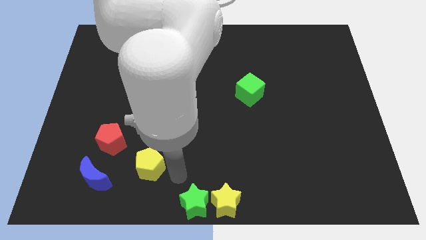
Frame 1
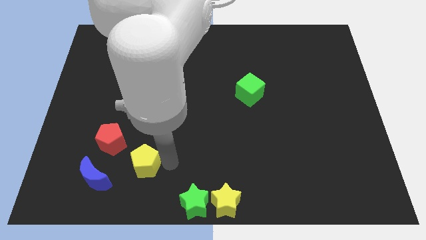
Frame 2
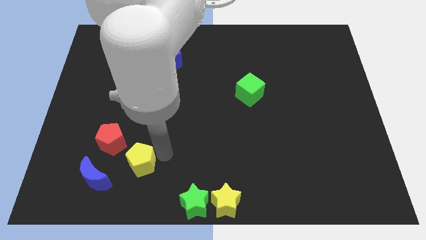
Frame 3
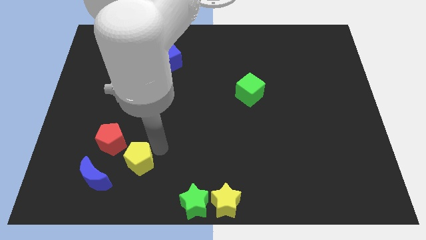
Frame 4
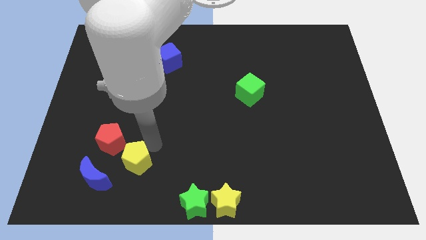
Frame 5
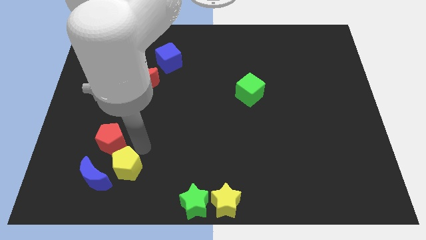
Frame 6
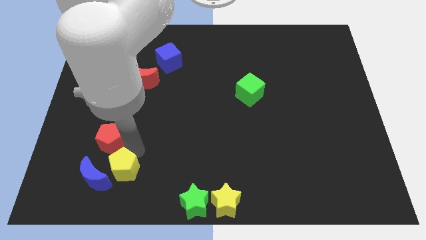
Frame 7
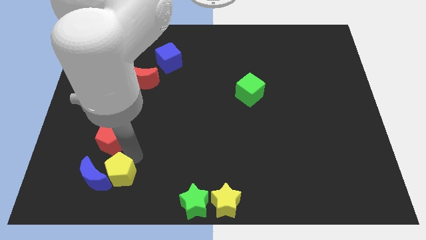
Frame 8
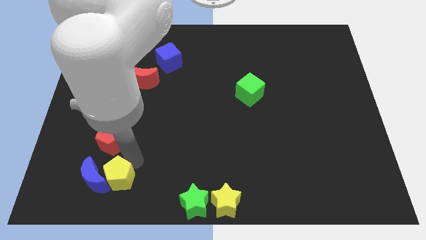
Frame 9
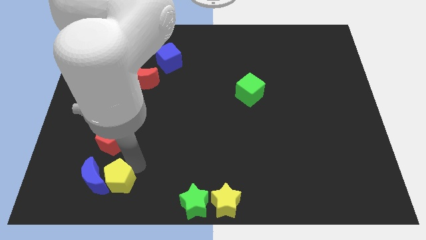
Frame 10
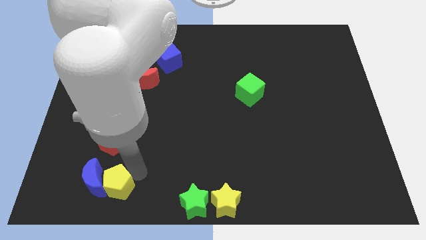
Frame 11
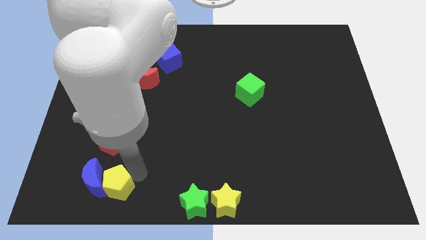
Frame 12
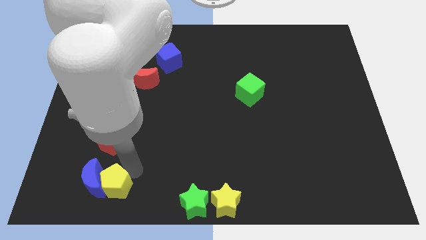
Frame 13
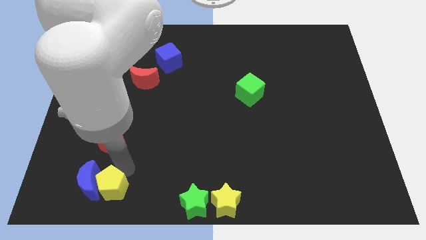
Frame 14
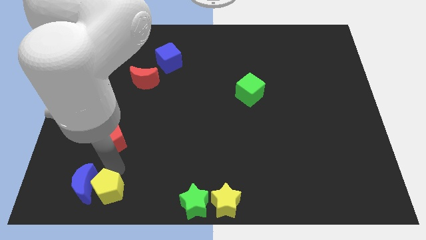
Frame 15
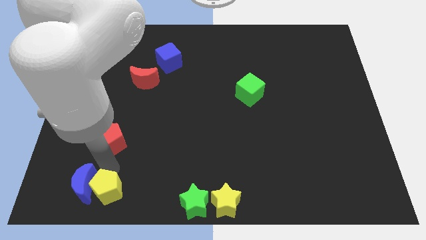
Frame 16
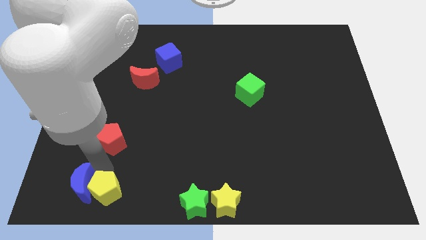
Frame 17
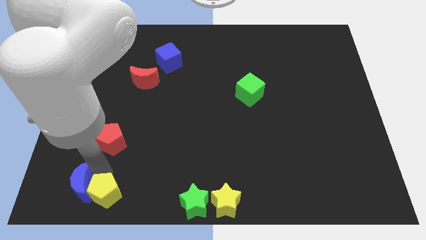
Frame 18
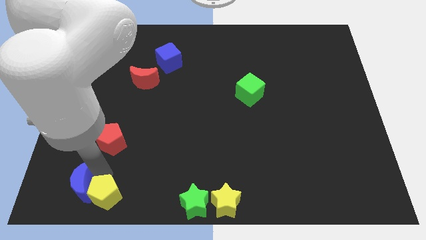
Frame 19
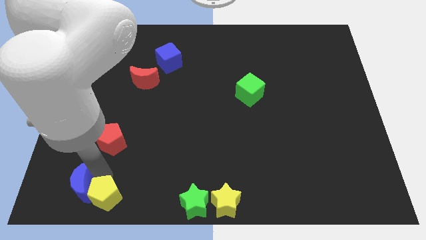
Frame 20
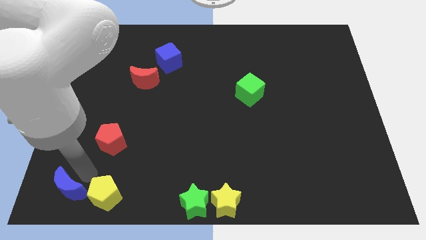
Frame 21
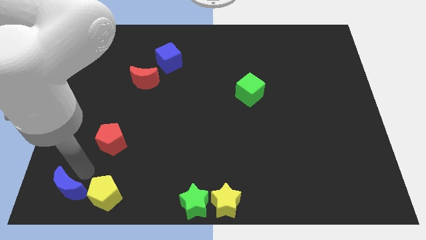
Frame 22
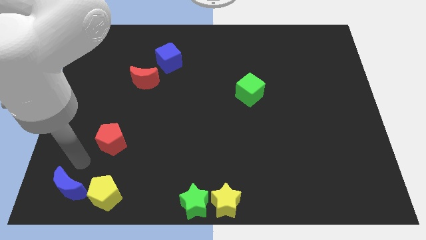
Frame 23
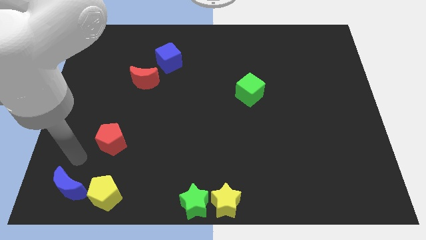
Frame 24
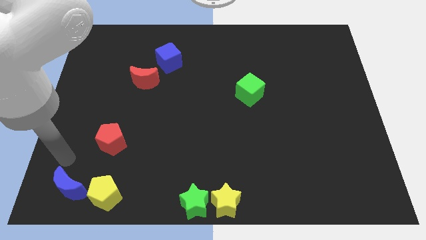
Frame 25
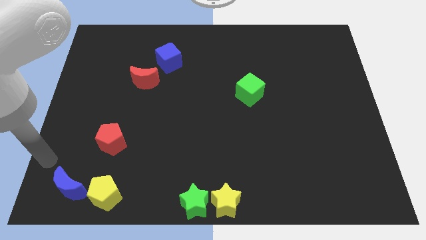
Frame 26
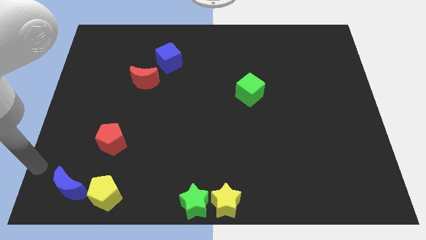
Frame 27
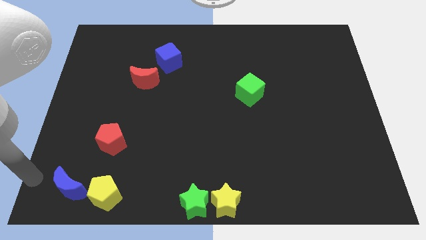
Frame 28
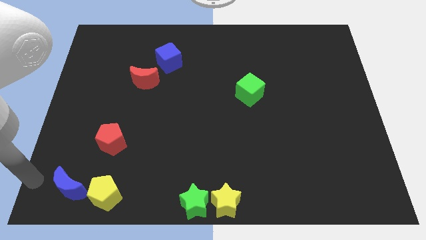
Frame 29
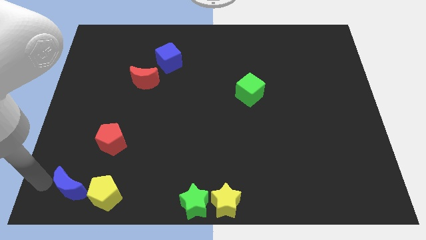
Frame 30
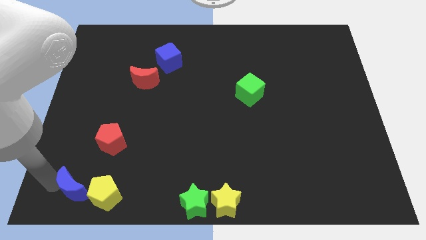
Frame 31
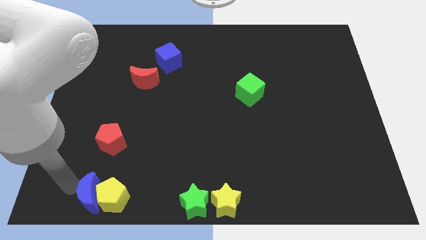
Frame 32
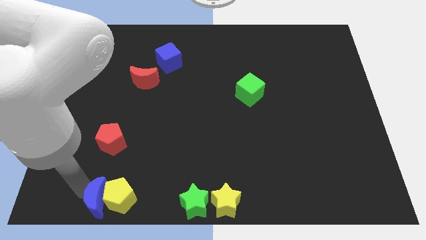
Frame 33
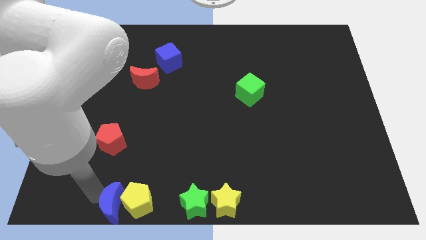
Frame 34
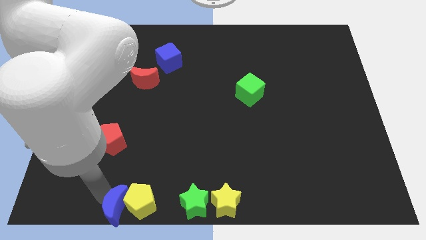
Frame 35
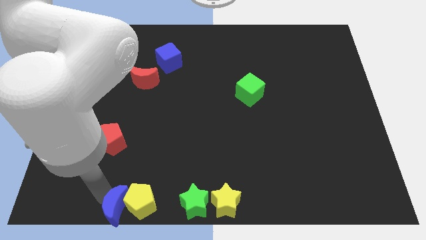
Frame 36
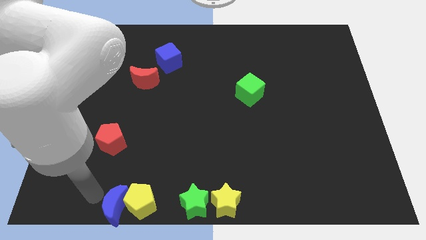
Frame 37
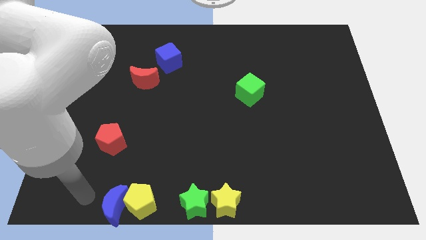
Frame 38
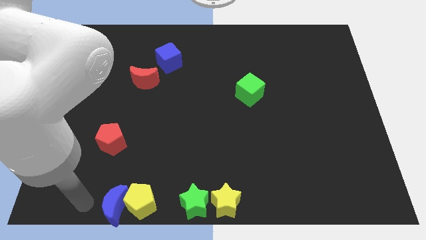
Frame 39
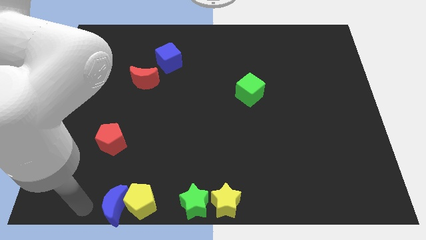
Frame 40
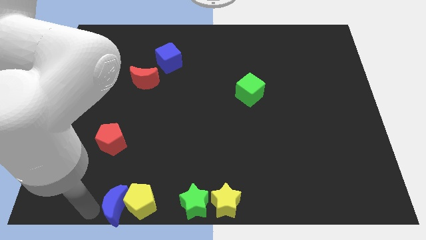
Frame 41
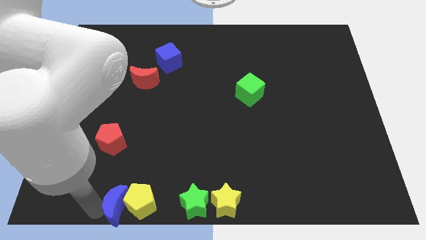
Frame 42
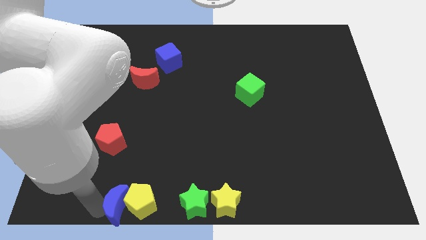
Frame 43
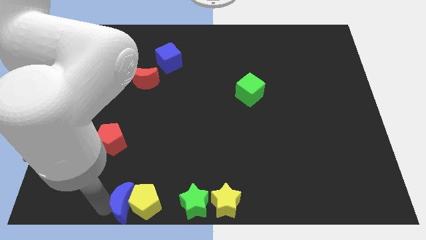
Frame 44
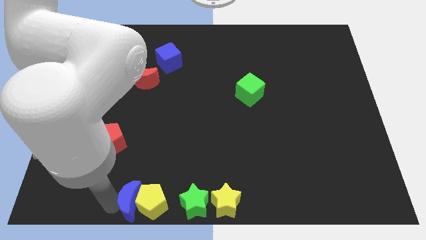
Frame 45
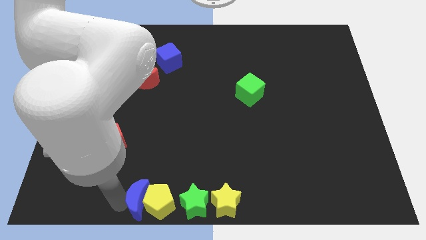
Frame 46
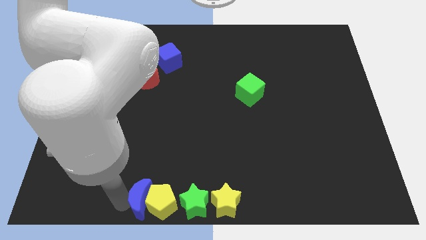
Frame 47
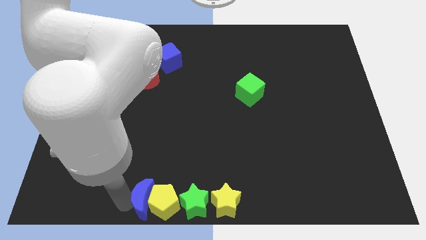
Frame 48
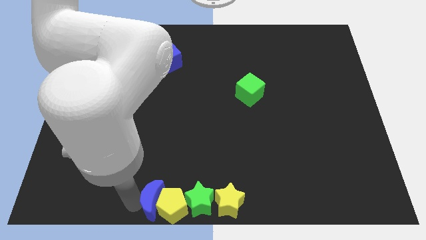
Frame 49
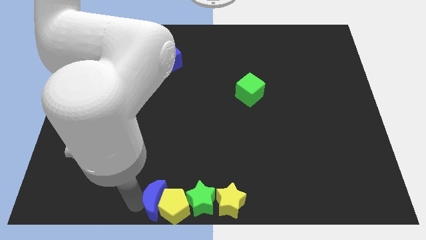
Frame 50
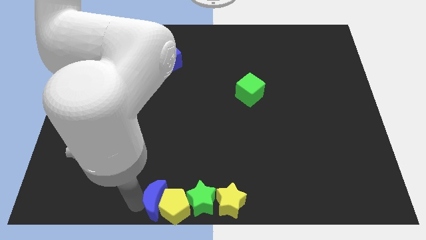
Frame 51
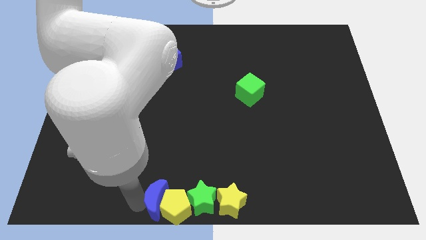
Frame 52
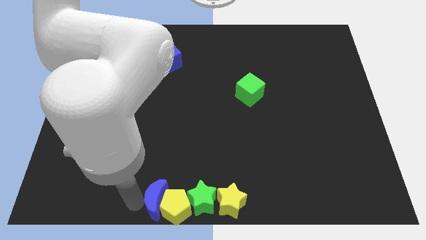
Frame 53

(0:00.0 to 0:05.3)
push the yellow pentagon with blue crescent into the green star

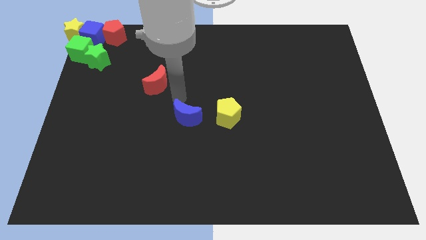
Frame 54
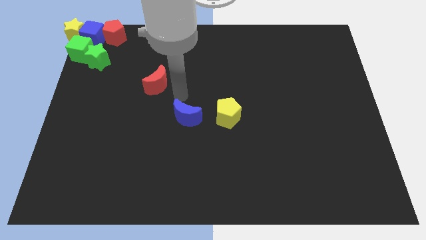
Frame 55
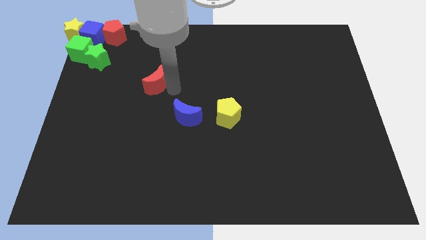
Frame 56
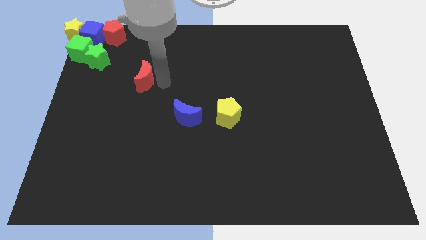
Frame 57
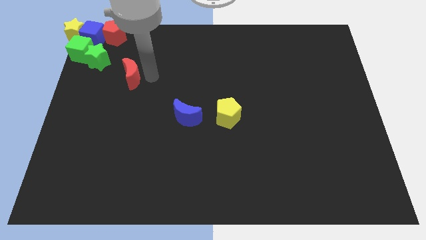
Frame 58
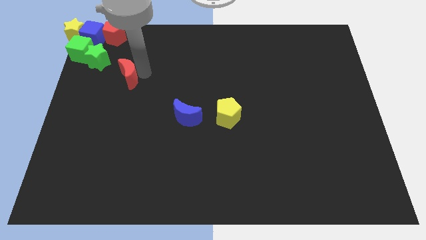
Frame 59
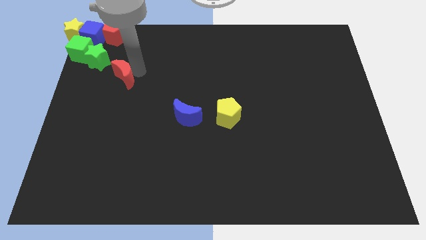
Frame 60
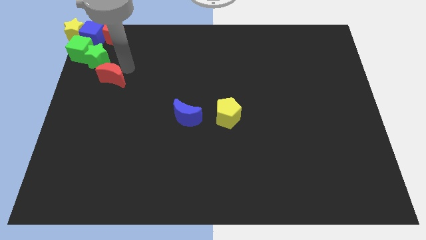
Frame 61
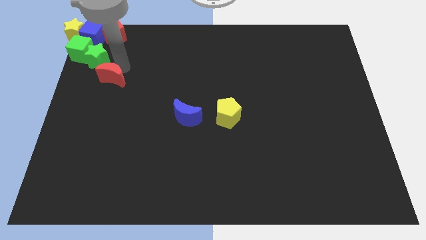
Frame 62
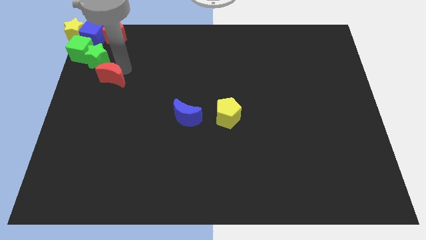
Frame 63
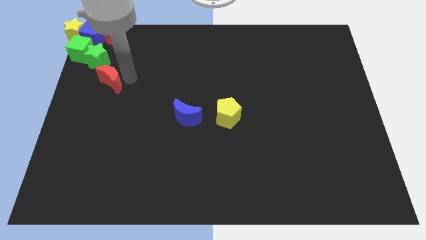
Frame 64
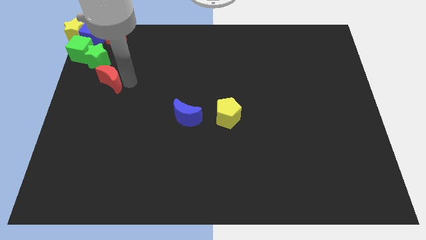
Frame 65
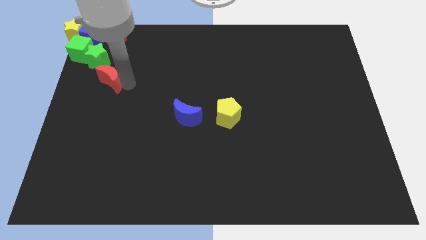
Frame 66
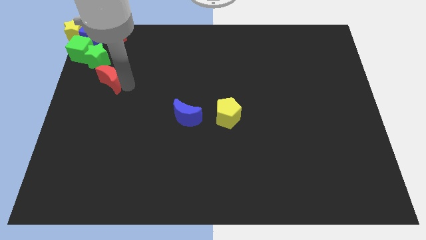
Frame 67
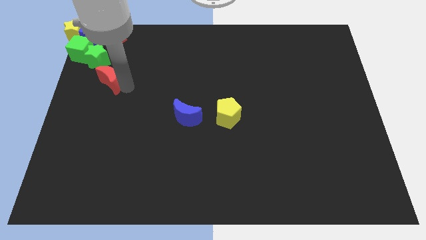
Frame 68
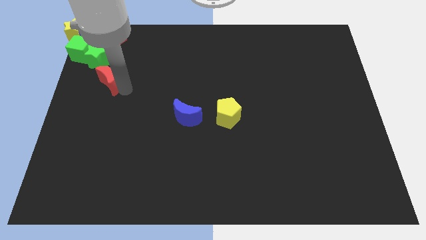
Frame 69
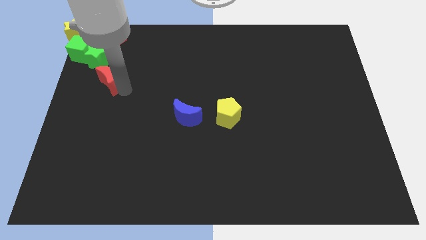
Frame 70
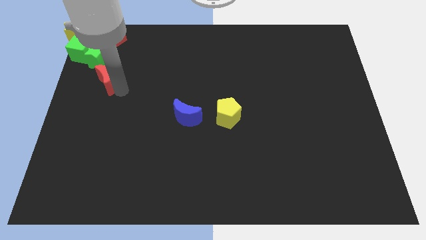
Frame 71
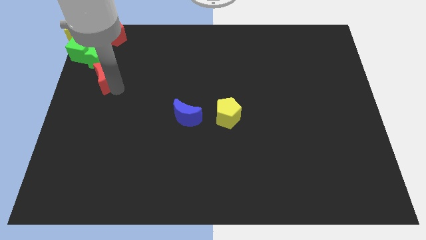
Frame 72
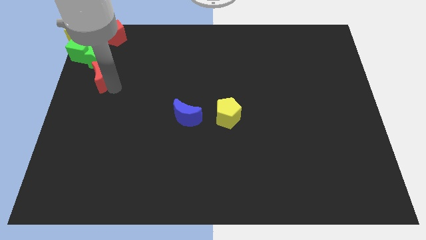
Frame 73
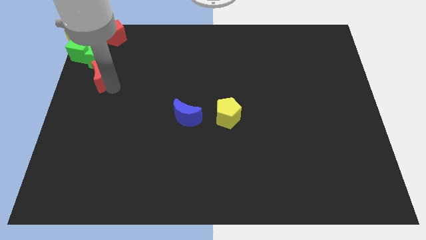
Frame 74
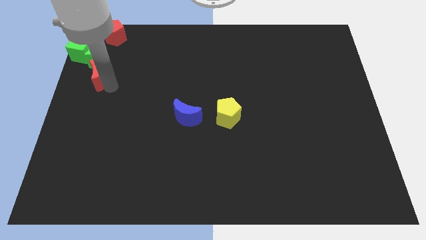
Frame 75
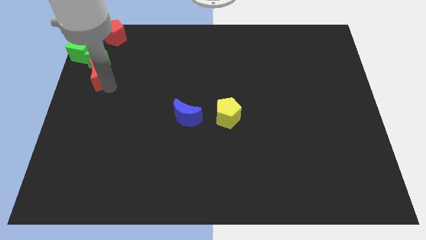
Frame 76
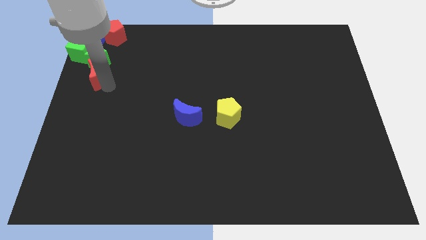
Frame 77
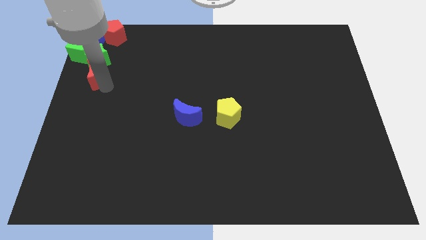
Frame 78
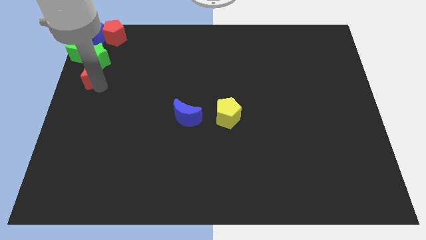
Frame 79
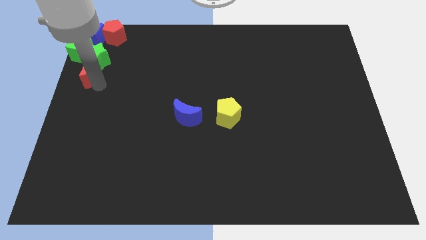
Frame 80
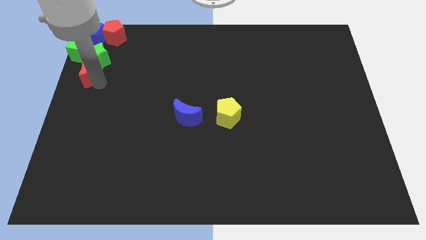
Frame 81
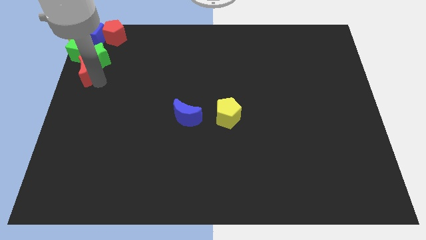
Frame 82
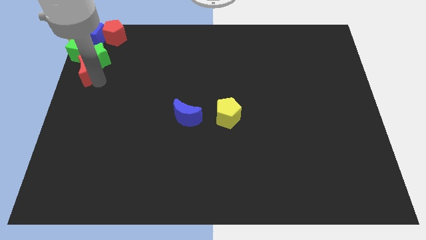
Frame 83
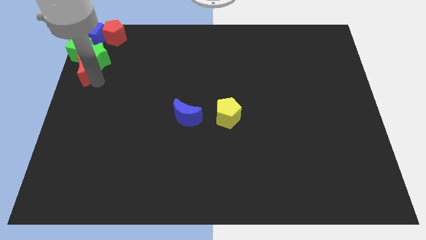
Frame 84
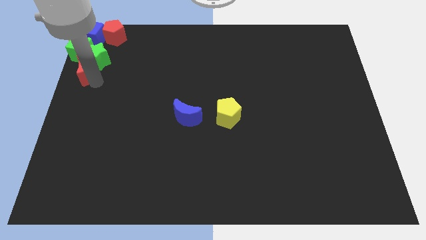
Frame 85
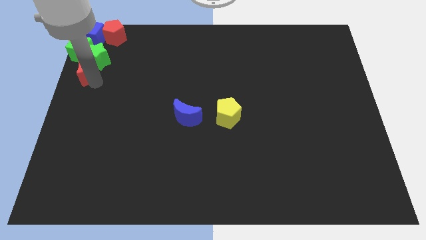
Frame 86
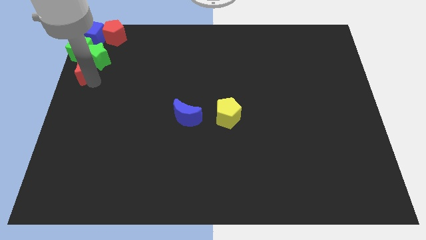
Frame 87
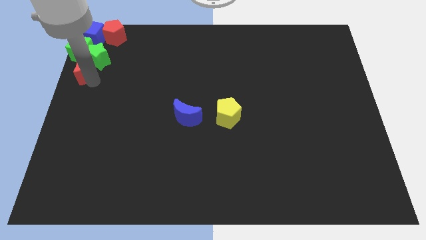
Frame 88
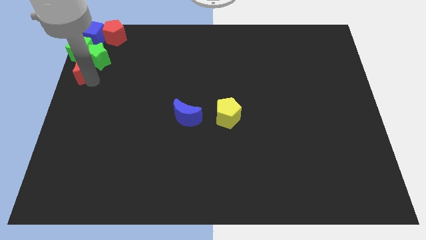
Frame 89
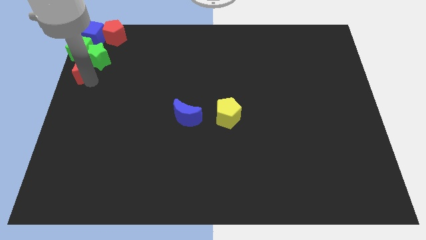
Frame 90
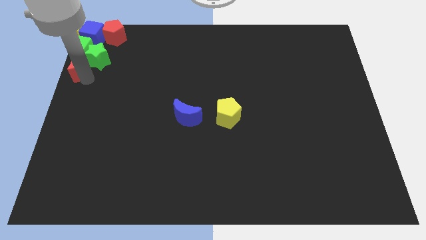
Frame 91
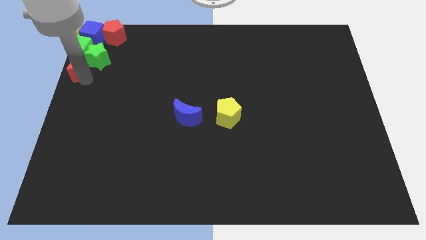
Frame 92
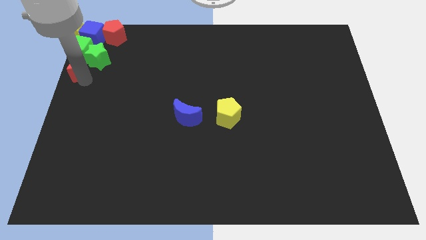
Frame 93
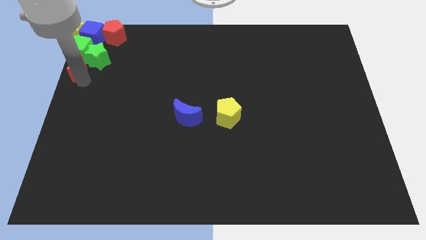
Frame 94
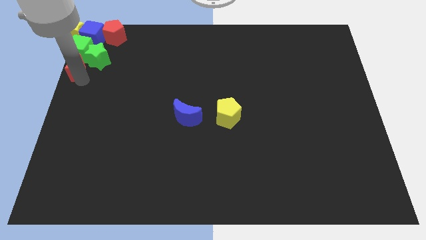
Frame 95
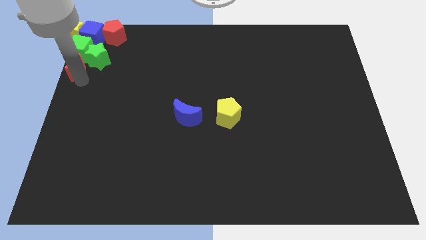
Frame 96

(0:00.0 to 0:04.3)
place red crescent to the bottom of green cube
